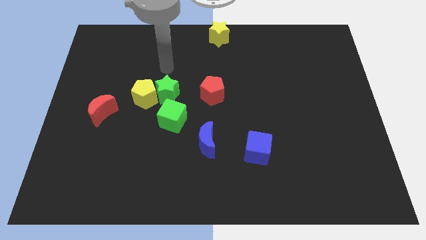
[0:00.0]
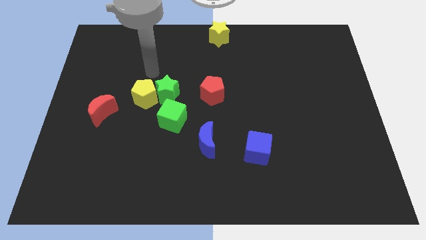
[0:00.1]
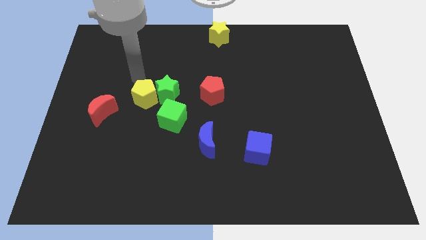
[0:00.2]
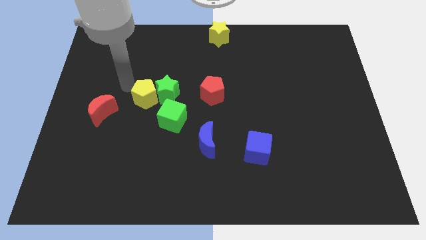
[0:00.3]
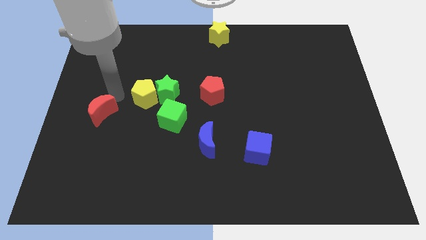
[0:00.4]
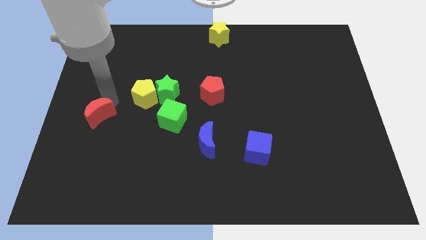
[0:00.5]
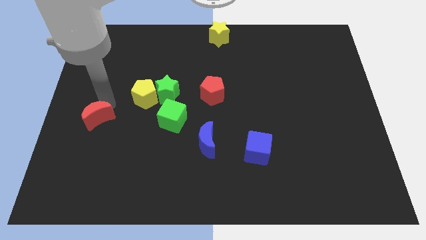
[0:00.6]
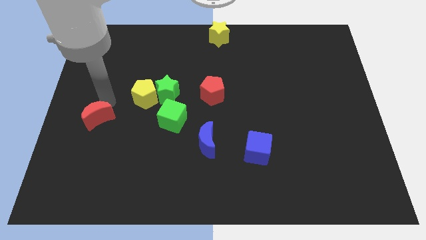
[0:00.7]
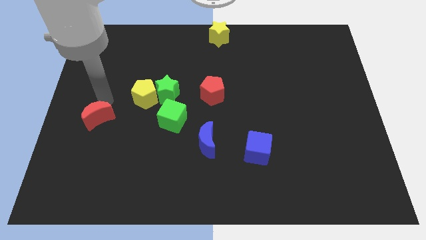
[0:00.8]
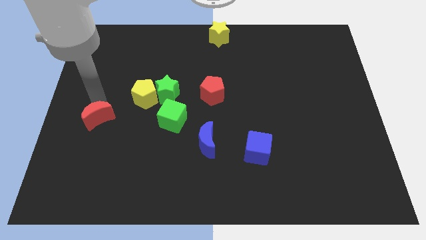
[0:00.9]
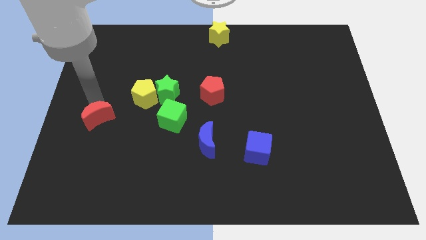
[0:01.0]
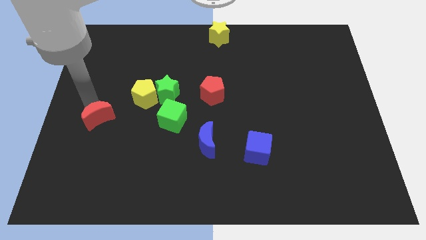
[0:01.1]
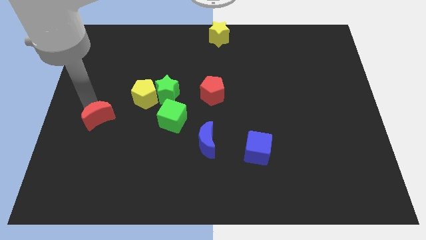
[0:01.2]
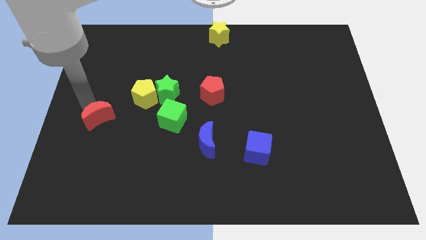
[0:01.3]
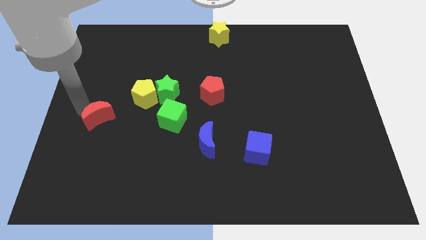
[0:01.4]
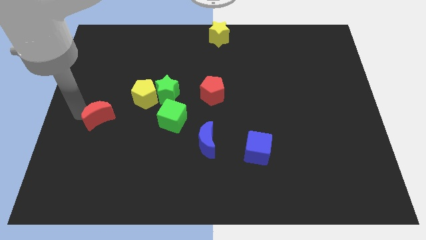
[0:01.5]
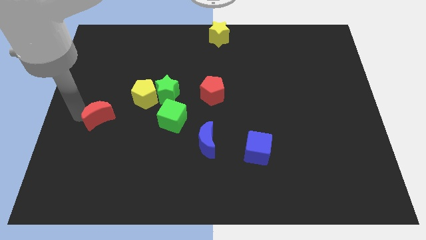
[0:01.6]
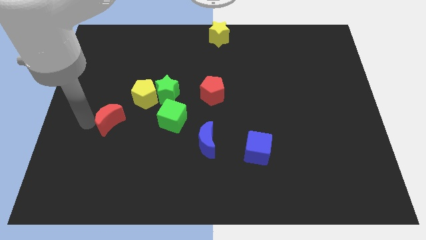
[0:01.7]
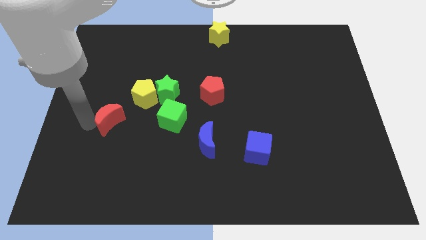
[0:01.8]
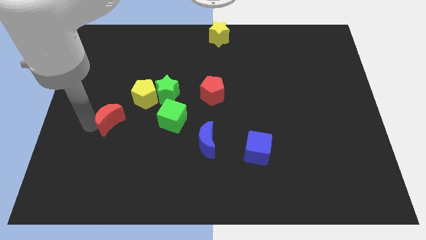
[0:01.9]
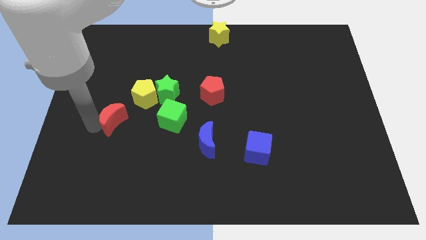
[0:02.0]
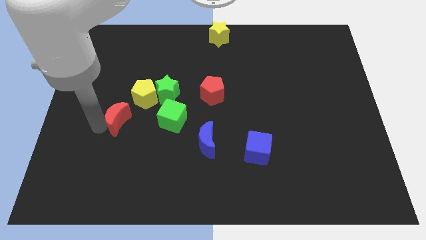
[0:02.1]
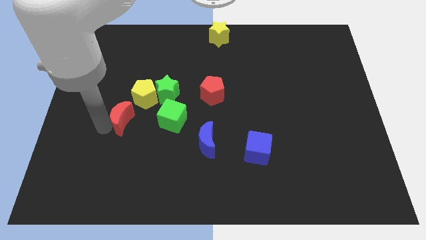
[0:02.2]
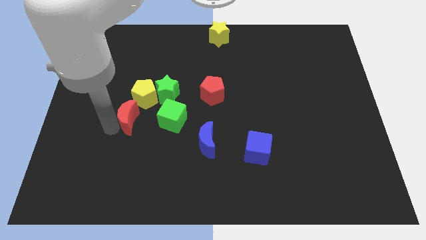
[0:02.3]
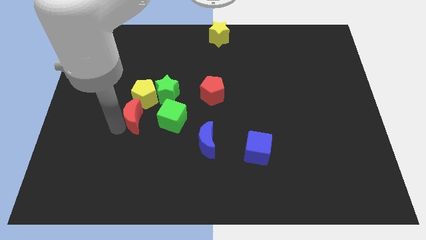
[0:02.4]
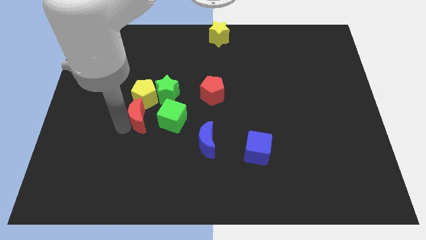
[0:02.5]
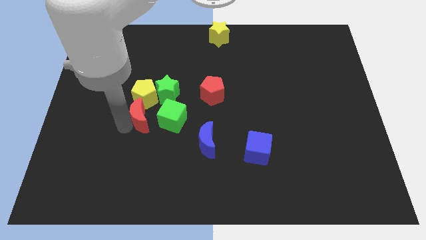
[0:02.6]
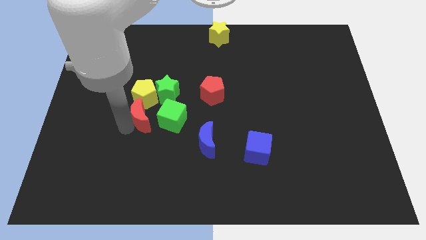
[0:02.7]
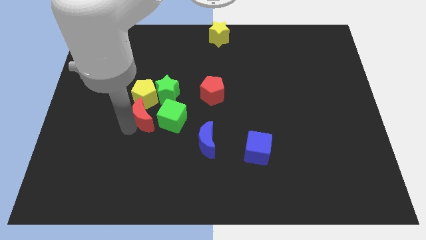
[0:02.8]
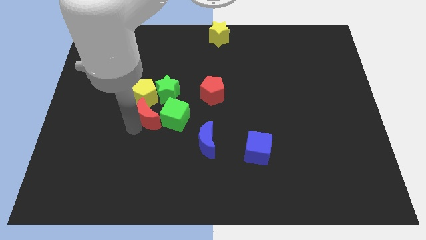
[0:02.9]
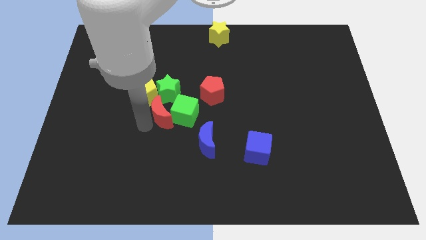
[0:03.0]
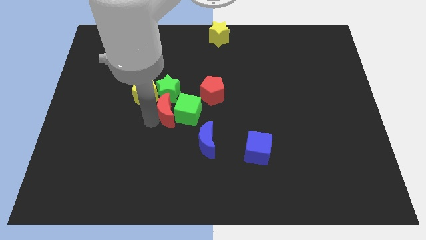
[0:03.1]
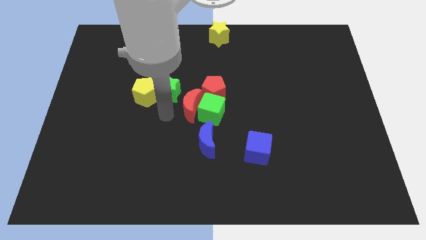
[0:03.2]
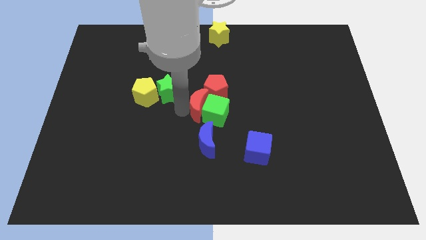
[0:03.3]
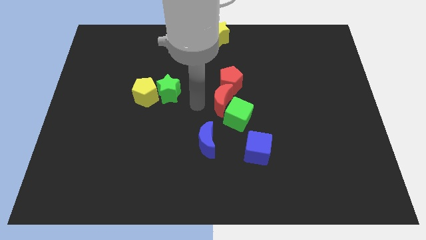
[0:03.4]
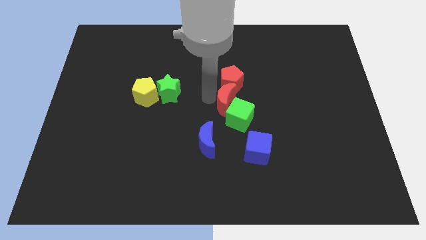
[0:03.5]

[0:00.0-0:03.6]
push red moon to the center of the moon

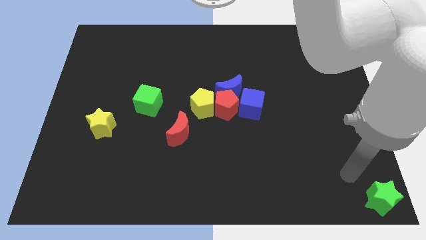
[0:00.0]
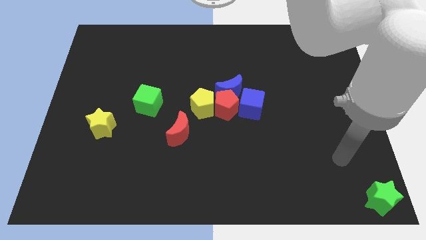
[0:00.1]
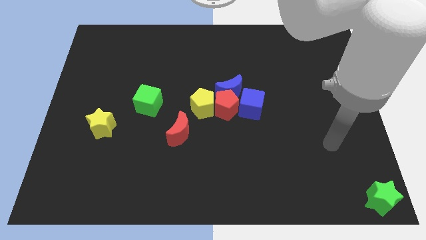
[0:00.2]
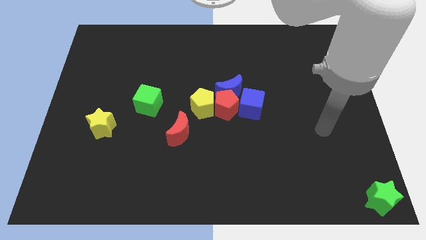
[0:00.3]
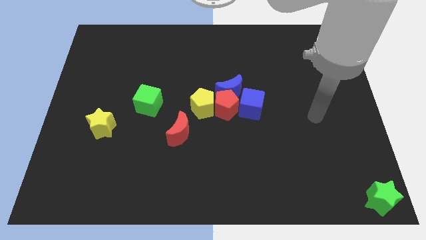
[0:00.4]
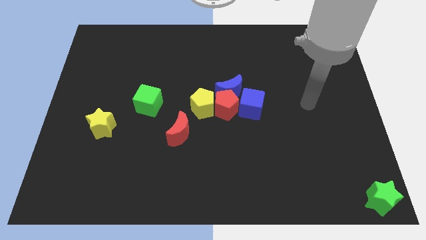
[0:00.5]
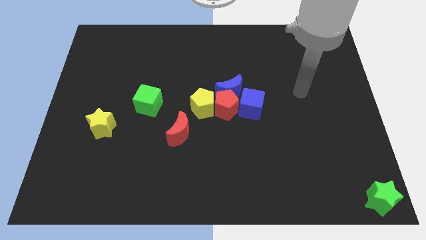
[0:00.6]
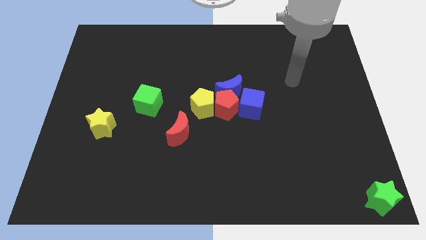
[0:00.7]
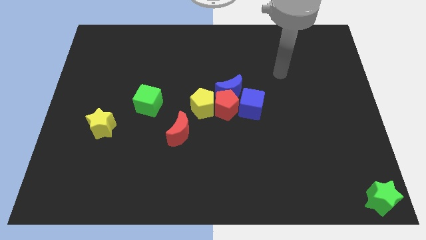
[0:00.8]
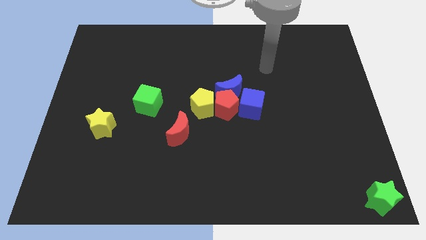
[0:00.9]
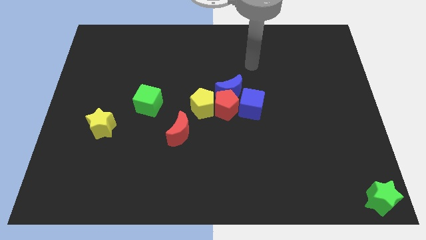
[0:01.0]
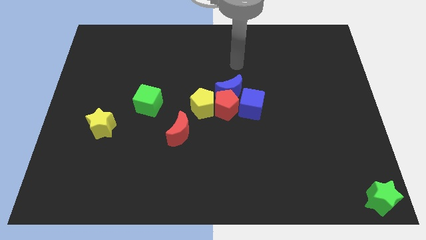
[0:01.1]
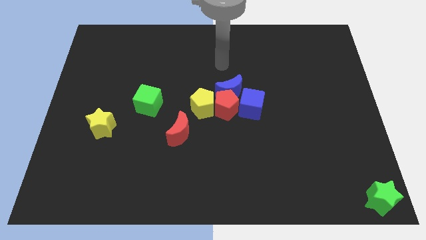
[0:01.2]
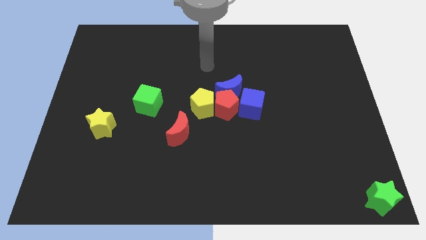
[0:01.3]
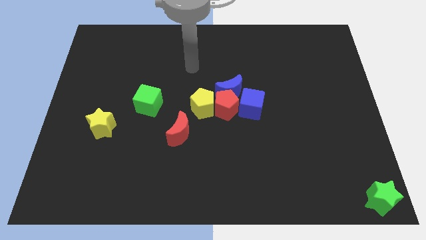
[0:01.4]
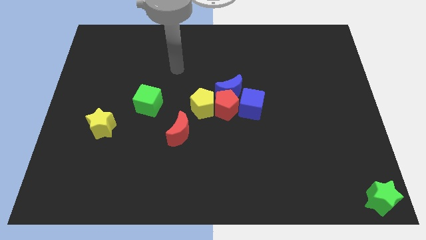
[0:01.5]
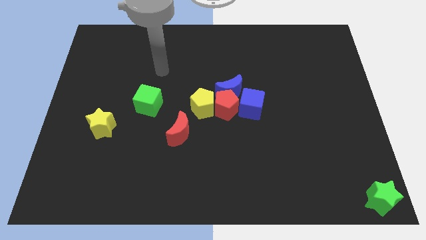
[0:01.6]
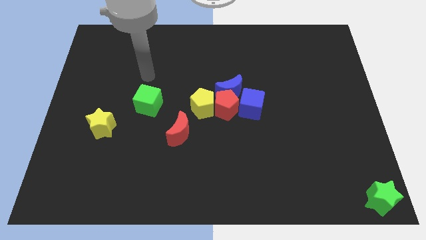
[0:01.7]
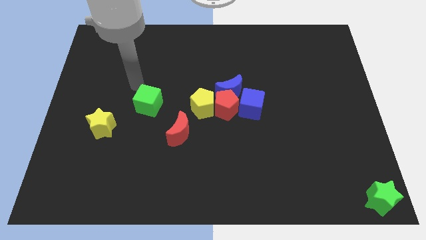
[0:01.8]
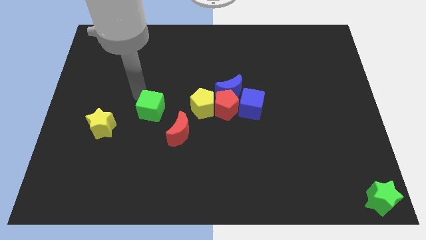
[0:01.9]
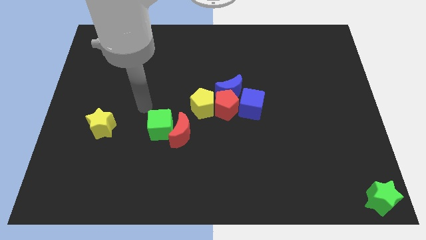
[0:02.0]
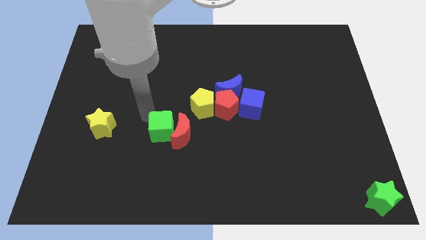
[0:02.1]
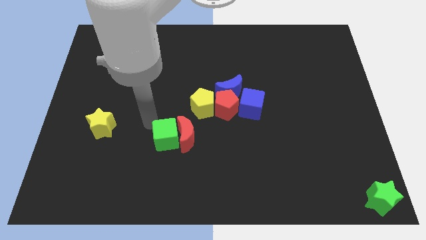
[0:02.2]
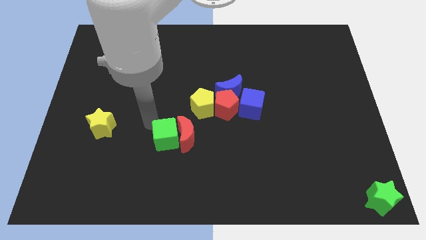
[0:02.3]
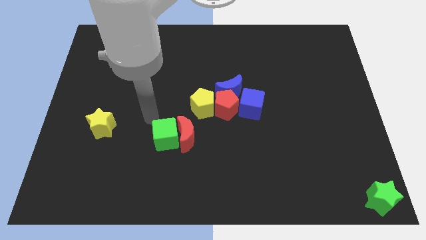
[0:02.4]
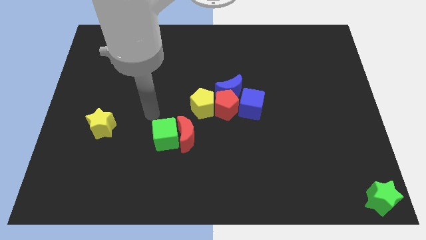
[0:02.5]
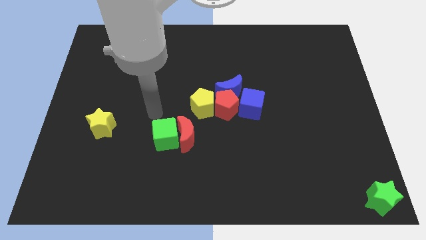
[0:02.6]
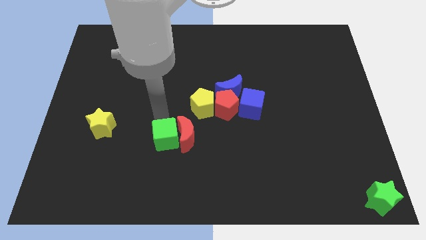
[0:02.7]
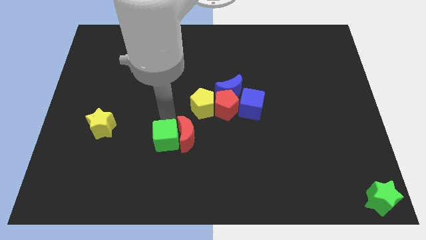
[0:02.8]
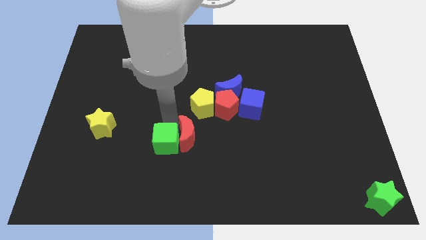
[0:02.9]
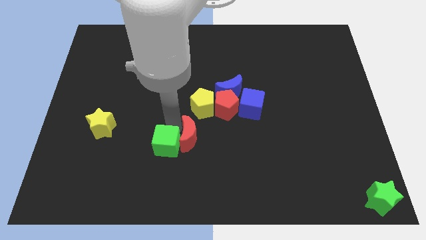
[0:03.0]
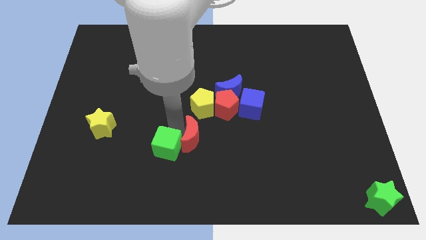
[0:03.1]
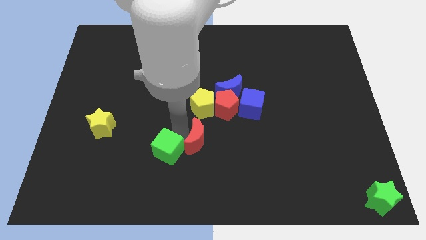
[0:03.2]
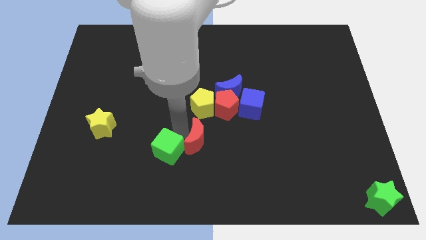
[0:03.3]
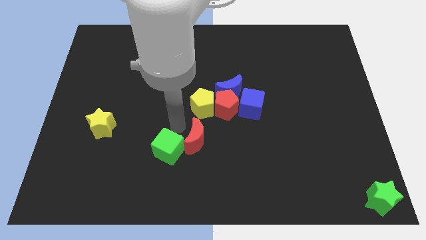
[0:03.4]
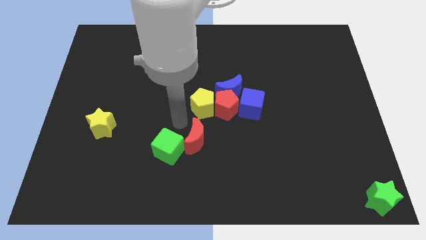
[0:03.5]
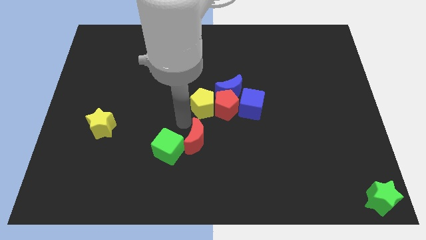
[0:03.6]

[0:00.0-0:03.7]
move the green cube slightly downwards

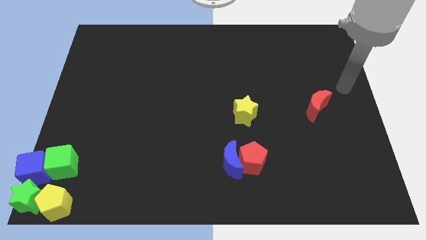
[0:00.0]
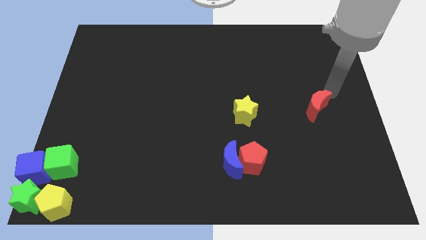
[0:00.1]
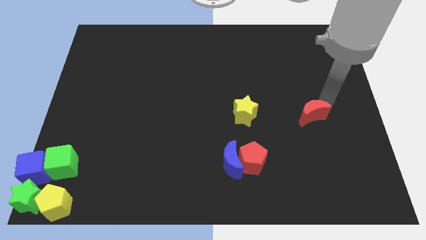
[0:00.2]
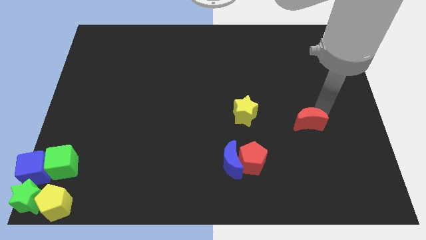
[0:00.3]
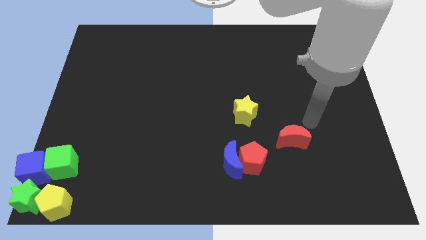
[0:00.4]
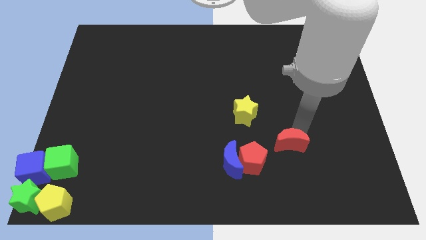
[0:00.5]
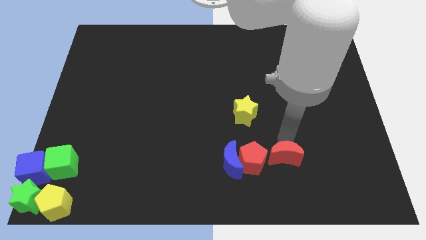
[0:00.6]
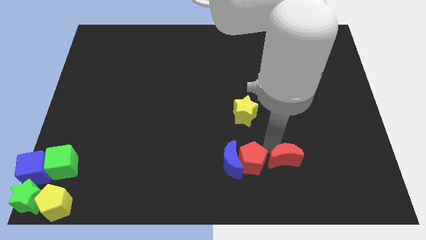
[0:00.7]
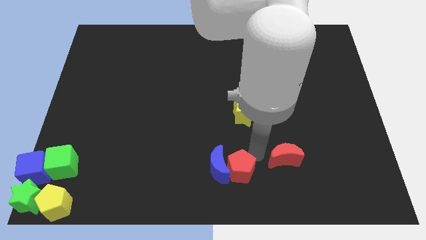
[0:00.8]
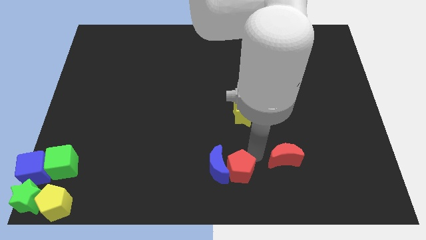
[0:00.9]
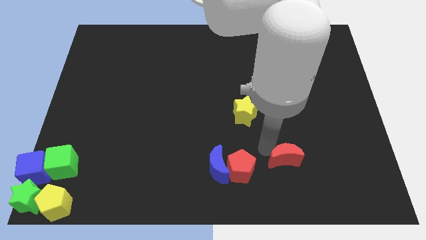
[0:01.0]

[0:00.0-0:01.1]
push the red crescent towards the right side of the red pentagon

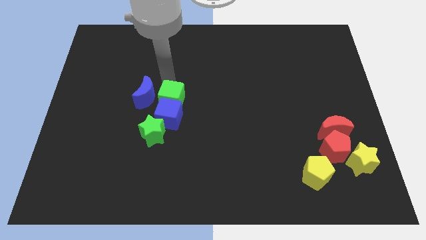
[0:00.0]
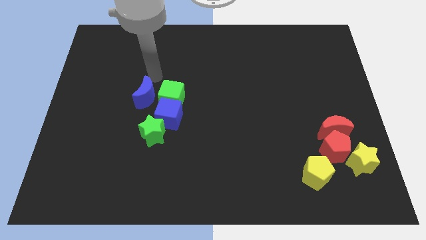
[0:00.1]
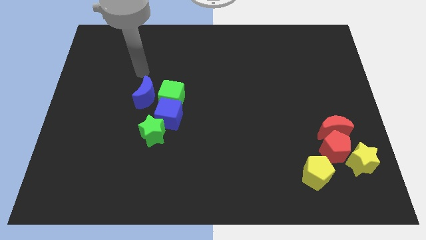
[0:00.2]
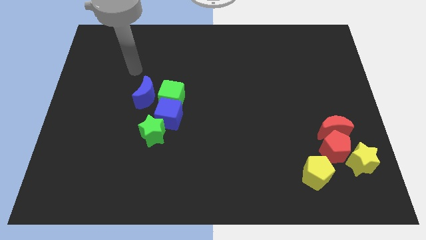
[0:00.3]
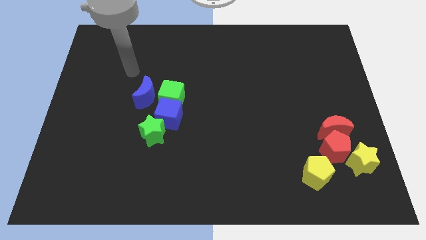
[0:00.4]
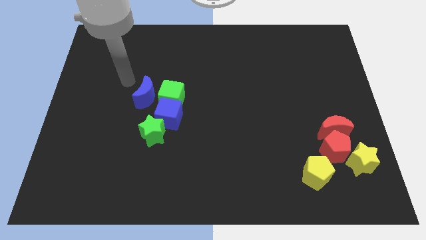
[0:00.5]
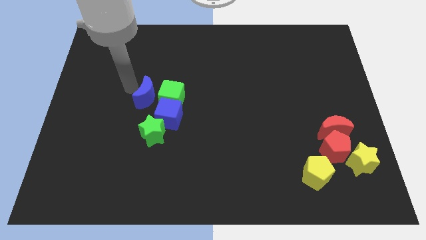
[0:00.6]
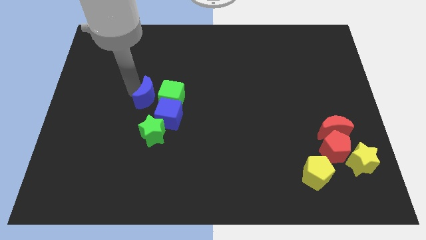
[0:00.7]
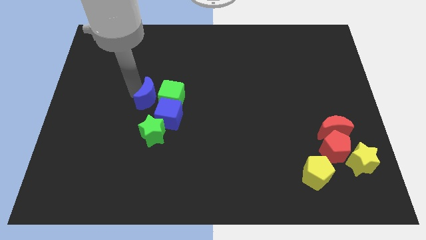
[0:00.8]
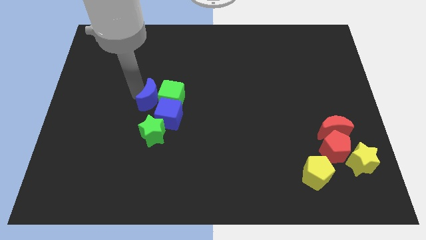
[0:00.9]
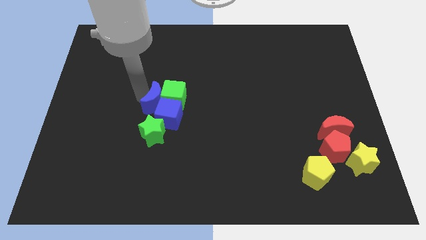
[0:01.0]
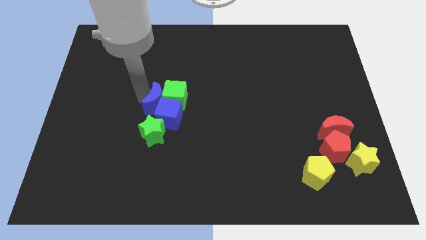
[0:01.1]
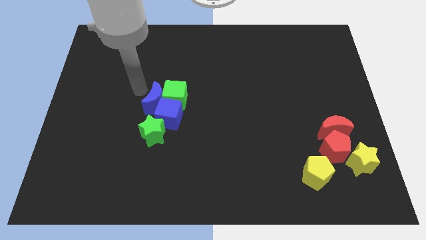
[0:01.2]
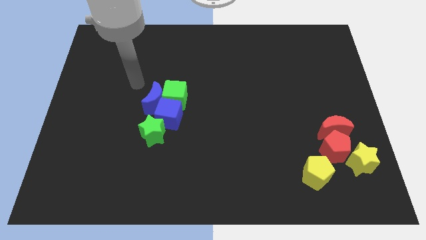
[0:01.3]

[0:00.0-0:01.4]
push the blue crescent into the green cube
